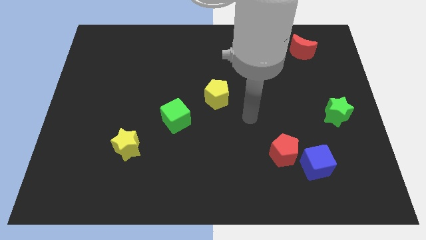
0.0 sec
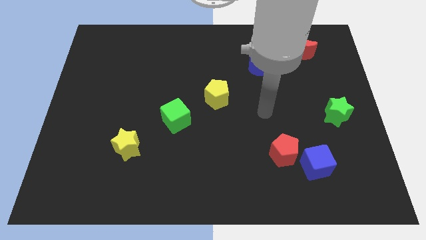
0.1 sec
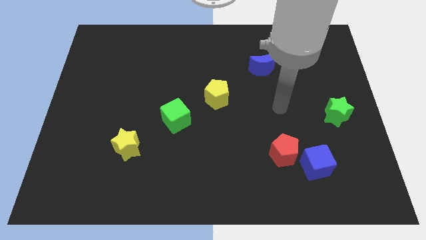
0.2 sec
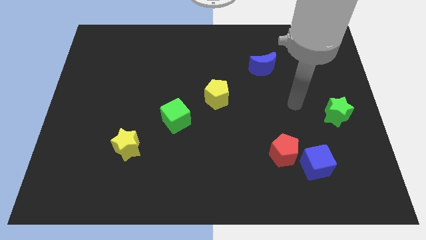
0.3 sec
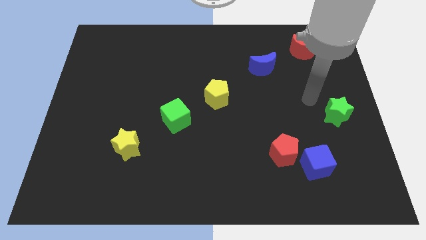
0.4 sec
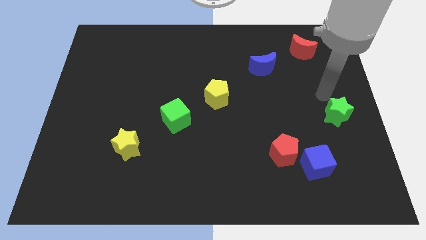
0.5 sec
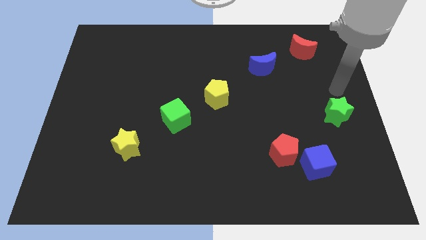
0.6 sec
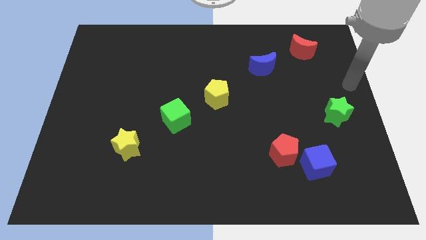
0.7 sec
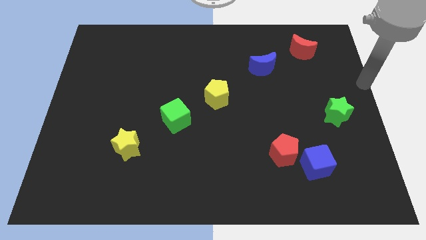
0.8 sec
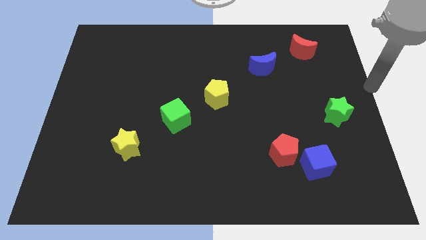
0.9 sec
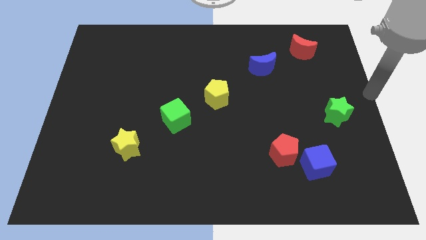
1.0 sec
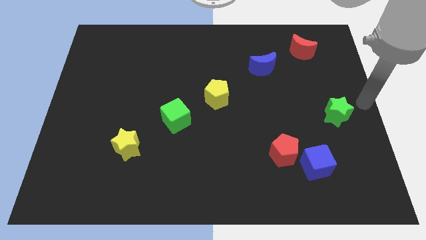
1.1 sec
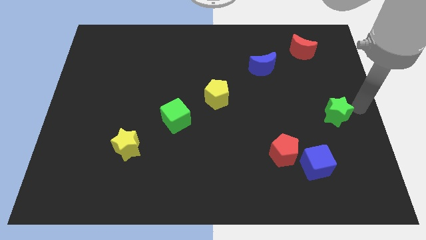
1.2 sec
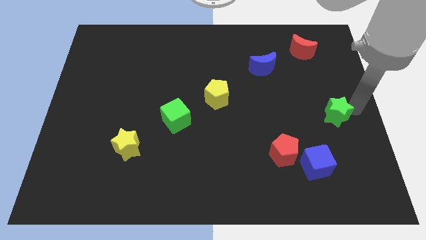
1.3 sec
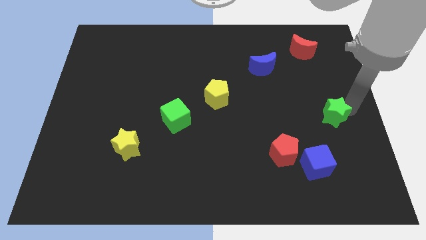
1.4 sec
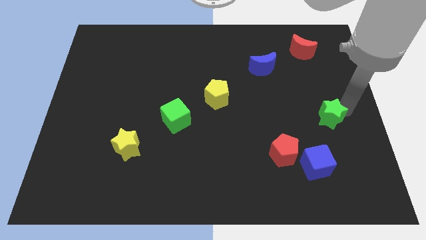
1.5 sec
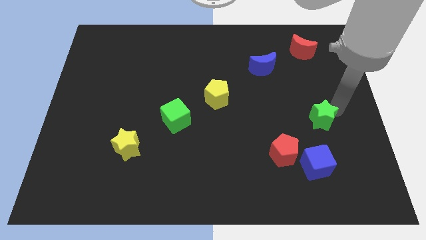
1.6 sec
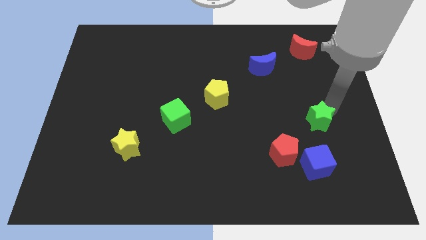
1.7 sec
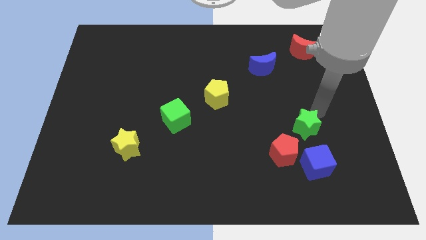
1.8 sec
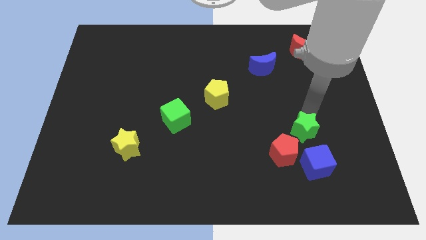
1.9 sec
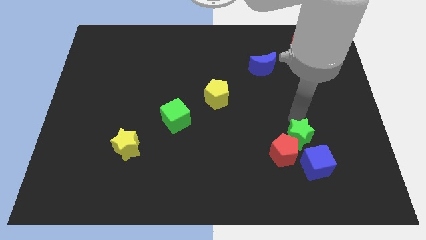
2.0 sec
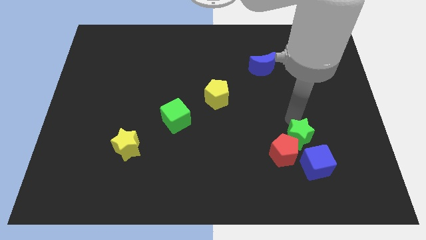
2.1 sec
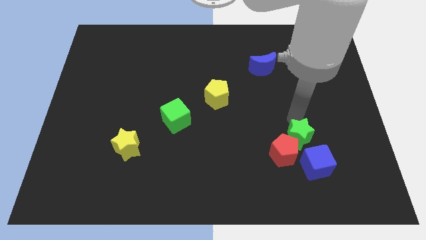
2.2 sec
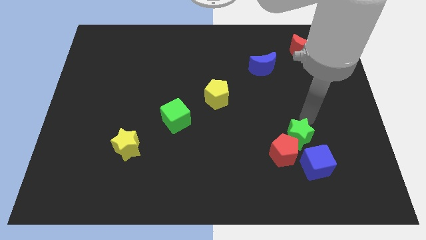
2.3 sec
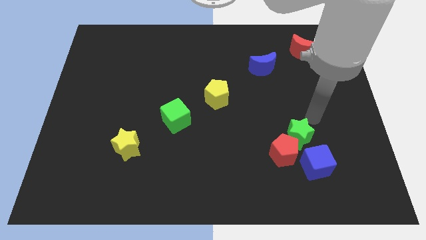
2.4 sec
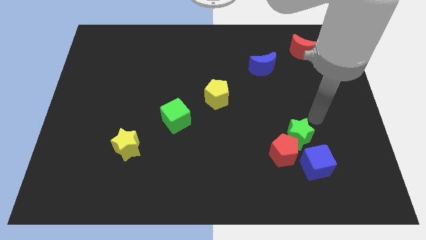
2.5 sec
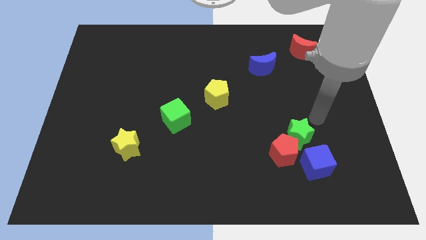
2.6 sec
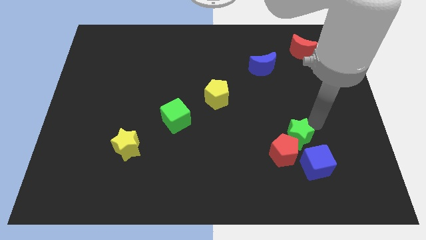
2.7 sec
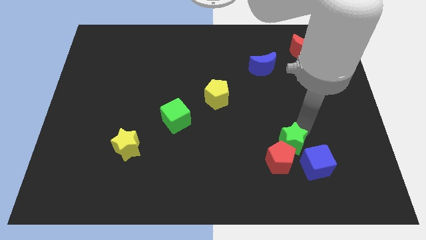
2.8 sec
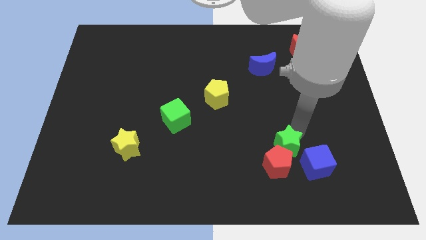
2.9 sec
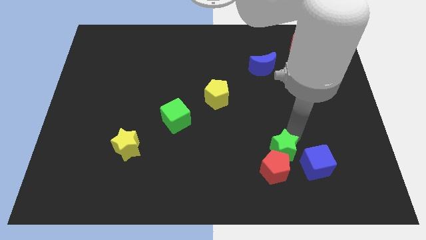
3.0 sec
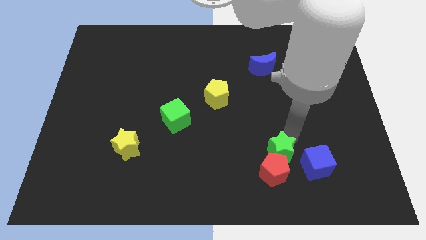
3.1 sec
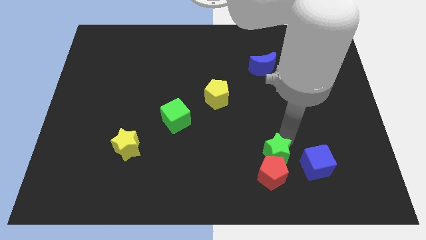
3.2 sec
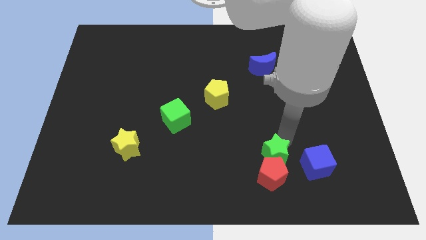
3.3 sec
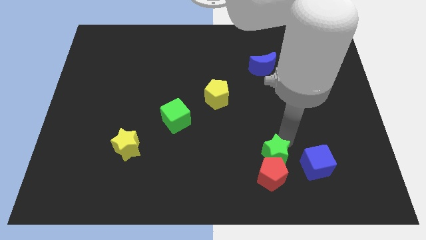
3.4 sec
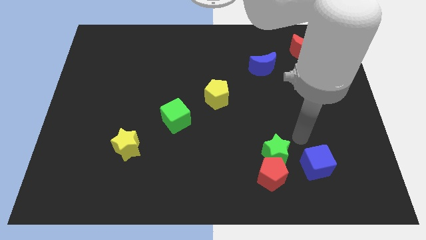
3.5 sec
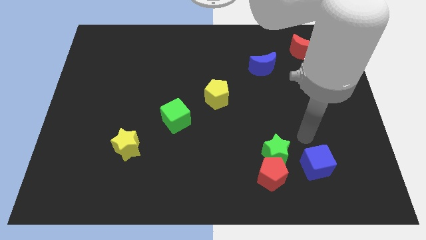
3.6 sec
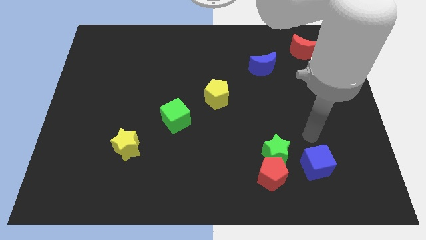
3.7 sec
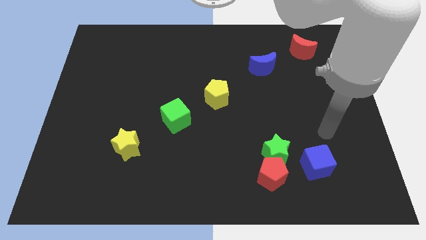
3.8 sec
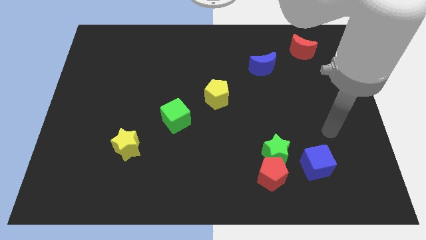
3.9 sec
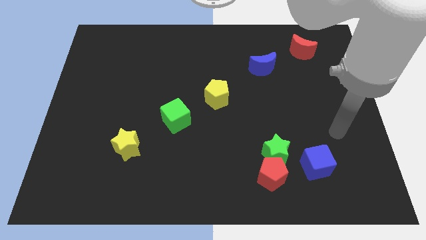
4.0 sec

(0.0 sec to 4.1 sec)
move green star into red pentagon

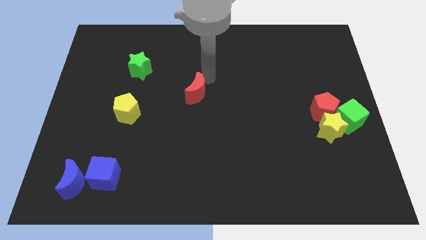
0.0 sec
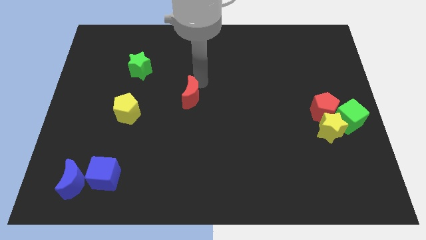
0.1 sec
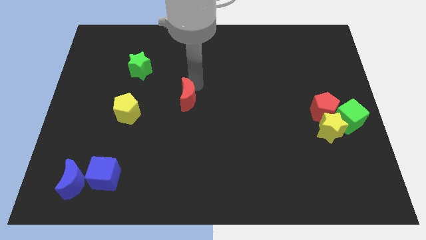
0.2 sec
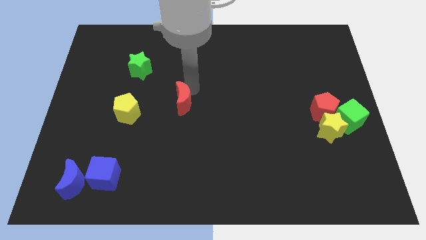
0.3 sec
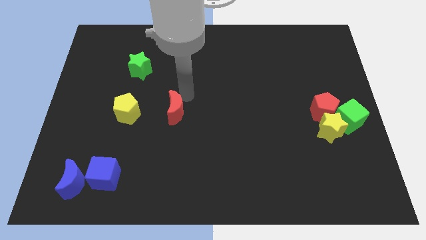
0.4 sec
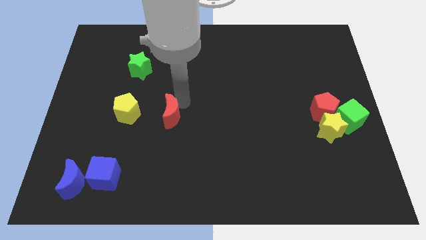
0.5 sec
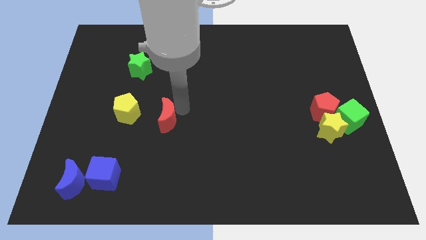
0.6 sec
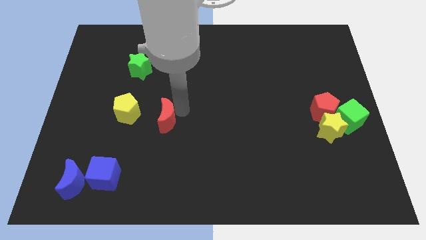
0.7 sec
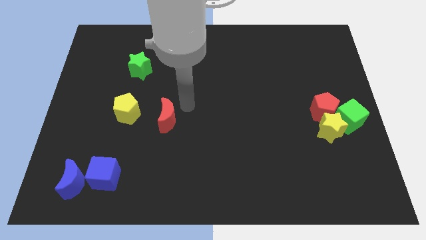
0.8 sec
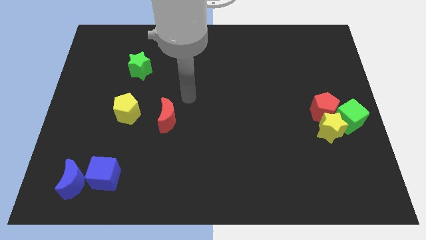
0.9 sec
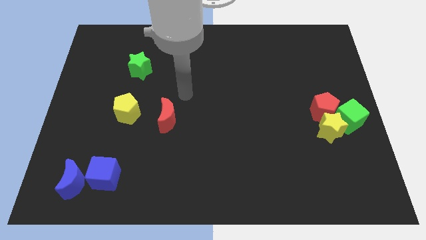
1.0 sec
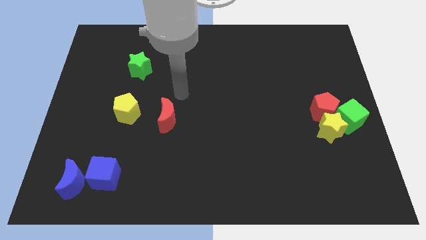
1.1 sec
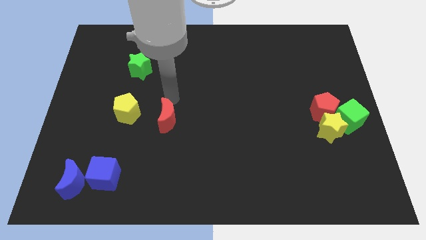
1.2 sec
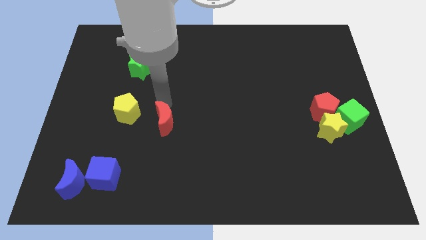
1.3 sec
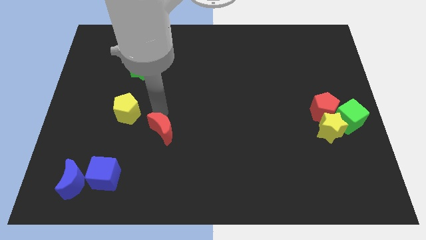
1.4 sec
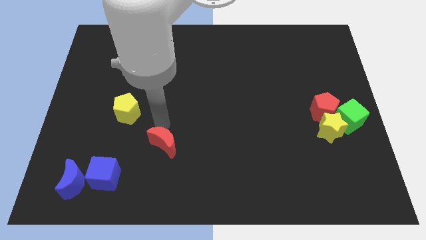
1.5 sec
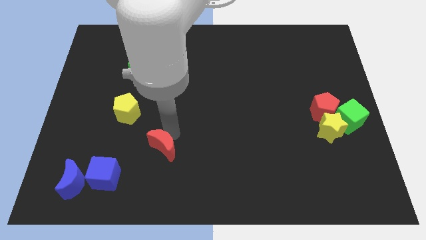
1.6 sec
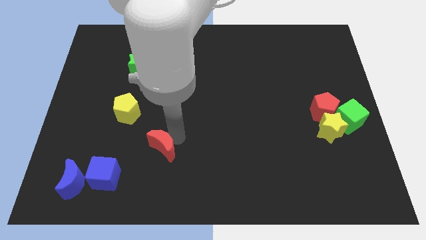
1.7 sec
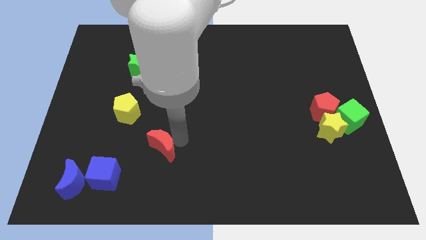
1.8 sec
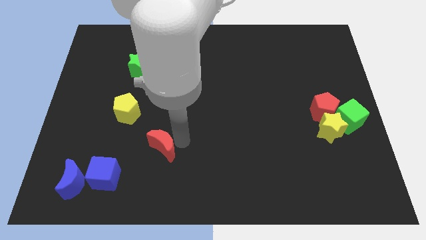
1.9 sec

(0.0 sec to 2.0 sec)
drag red moon diagonal to yellow pentagon

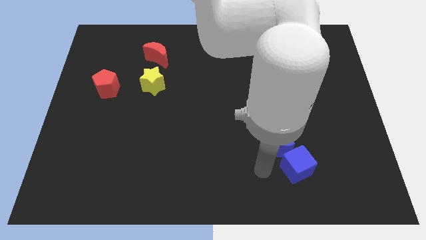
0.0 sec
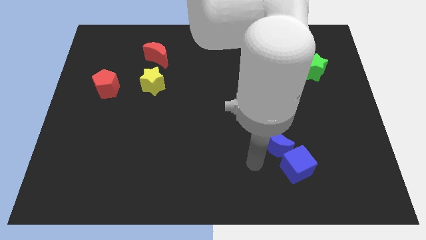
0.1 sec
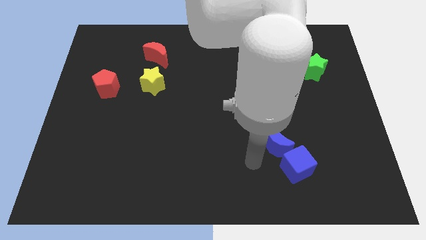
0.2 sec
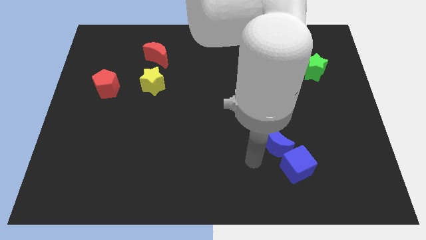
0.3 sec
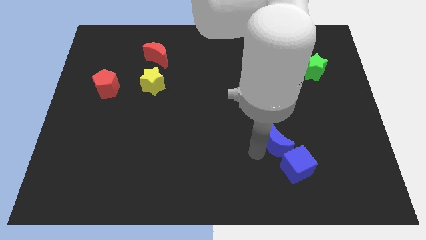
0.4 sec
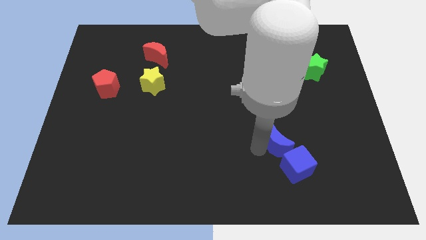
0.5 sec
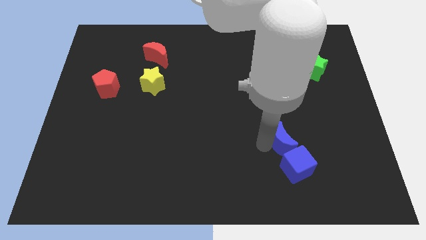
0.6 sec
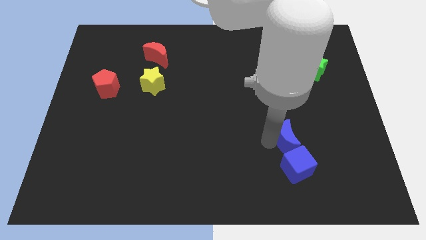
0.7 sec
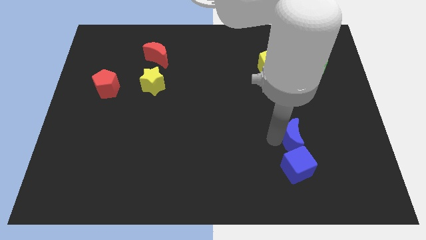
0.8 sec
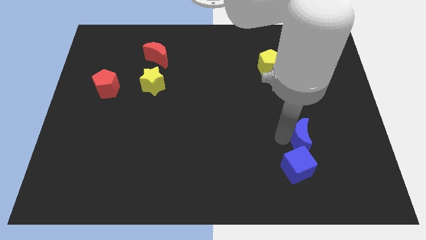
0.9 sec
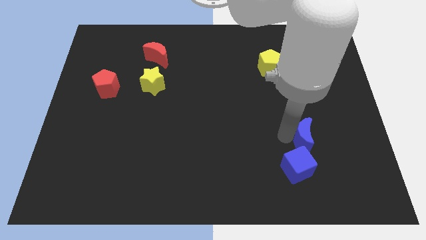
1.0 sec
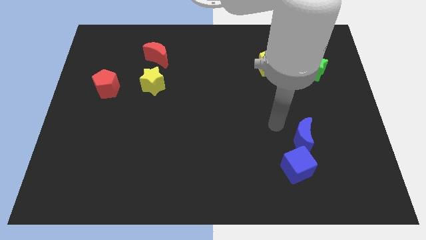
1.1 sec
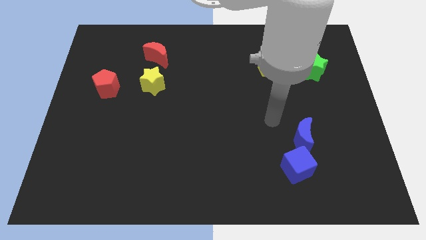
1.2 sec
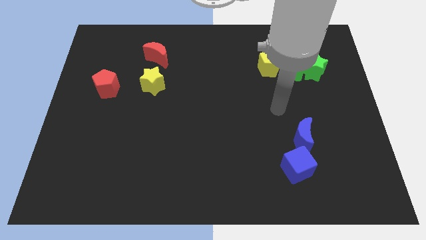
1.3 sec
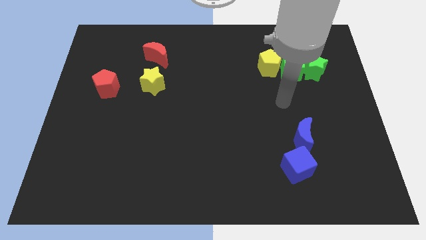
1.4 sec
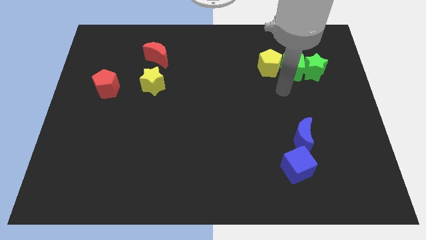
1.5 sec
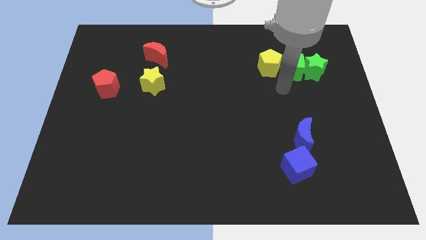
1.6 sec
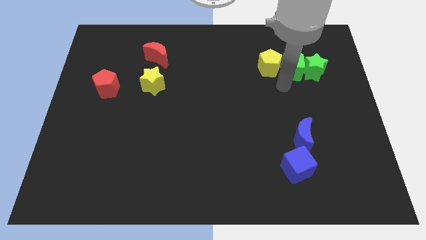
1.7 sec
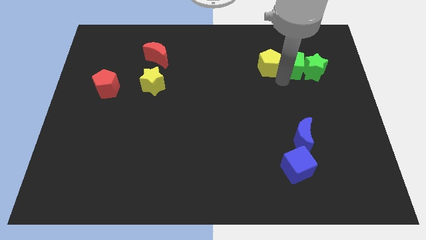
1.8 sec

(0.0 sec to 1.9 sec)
place the blue crescent above the blue cube

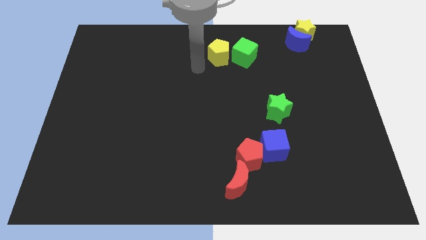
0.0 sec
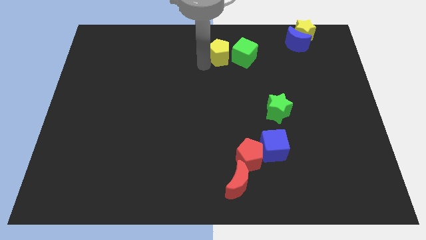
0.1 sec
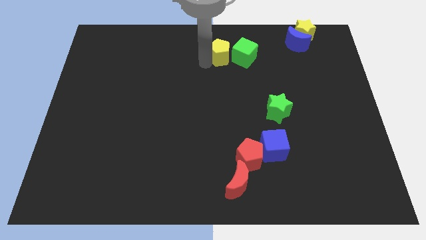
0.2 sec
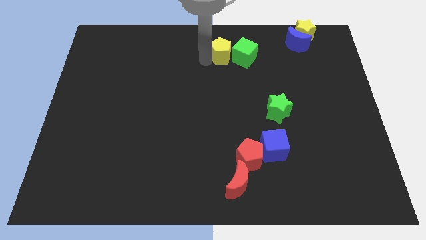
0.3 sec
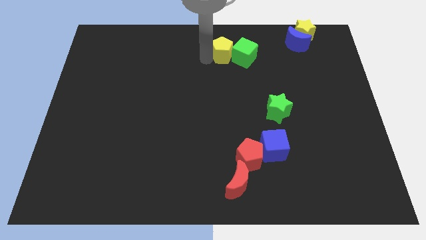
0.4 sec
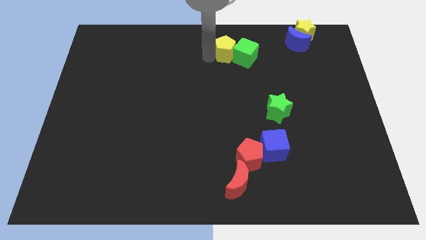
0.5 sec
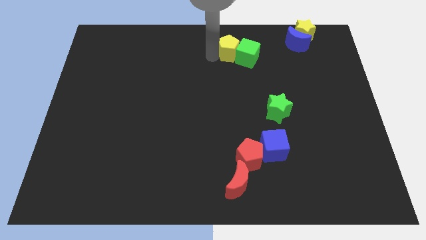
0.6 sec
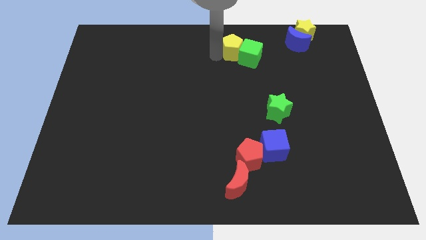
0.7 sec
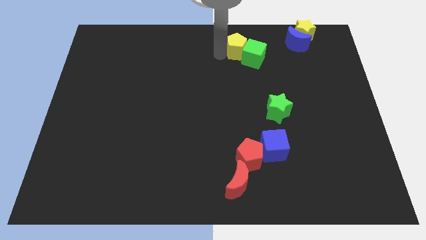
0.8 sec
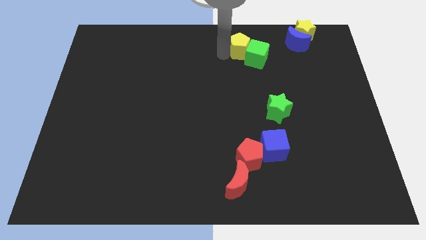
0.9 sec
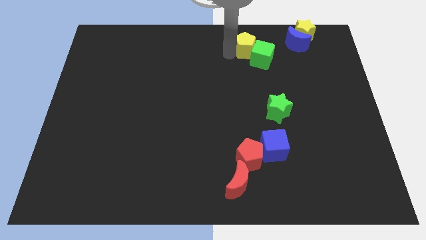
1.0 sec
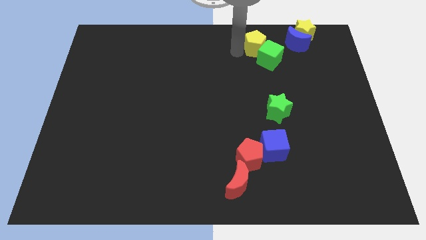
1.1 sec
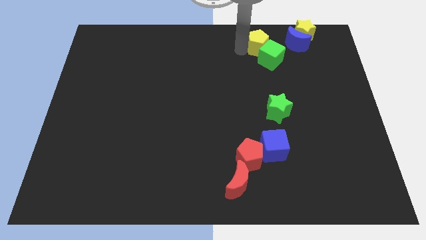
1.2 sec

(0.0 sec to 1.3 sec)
slide yellow pentagon and green cube towards the top right side of the board
